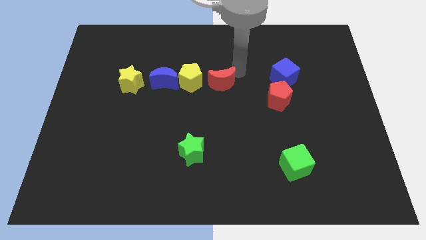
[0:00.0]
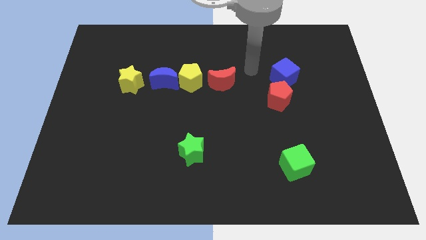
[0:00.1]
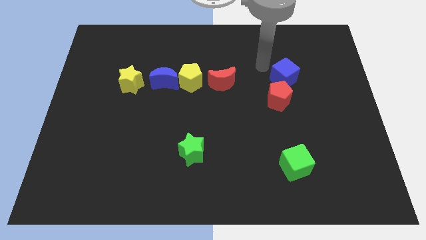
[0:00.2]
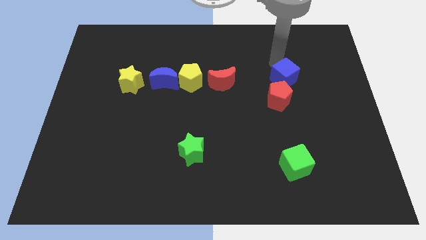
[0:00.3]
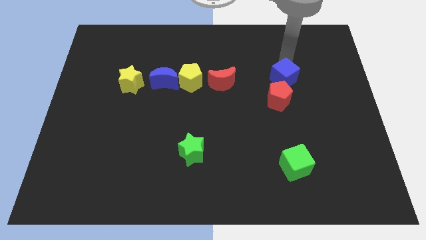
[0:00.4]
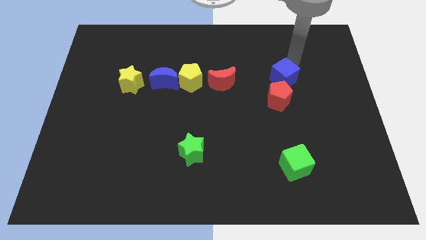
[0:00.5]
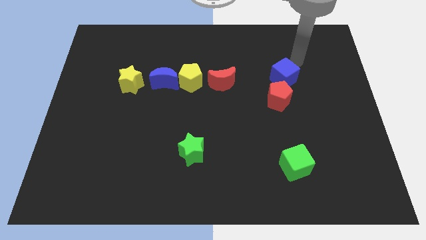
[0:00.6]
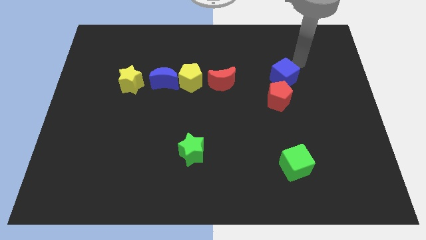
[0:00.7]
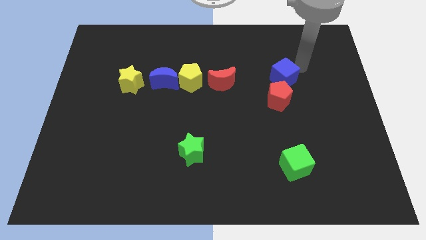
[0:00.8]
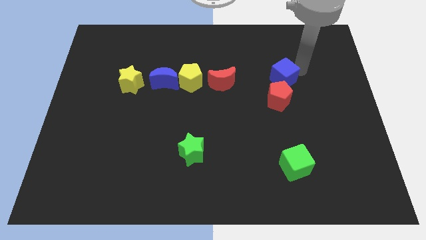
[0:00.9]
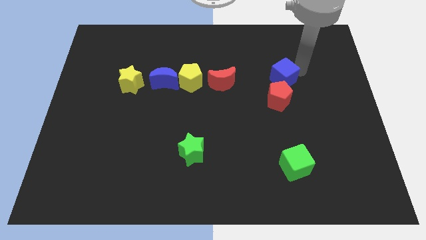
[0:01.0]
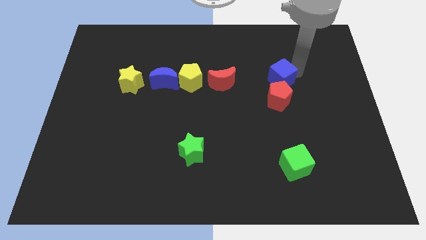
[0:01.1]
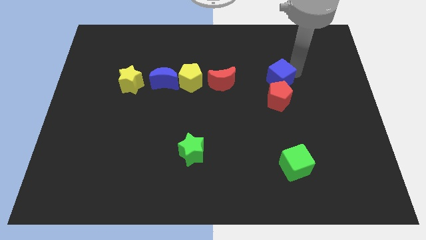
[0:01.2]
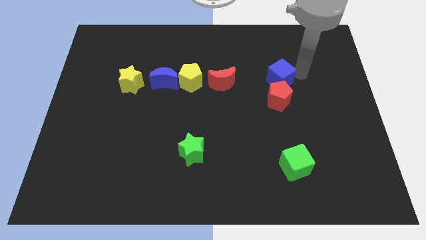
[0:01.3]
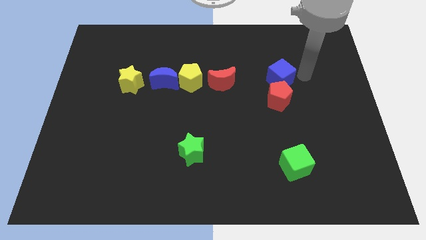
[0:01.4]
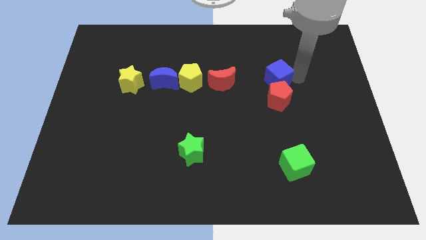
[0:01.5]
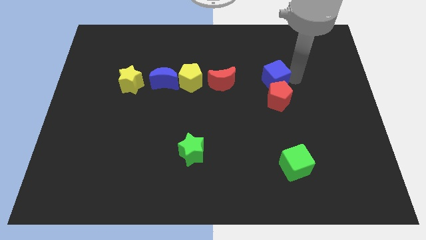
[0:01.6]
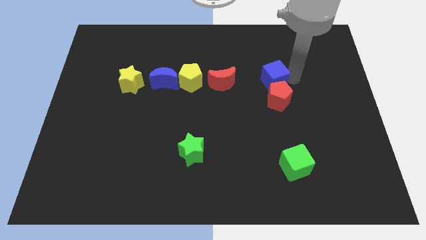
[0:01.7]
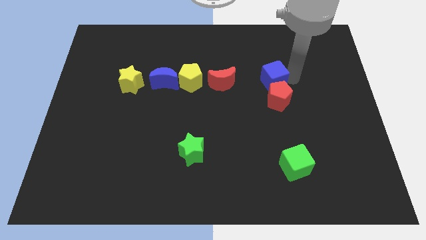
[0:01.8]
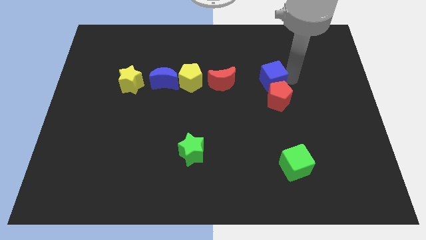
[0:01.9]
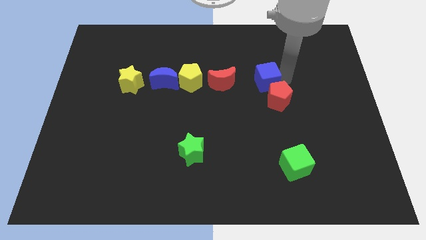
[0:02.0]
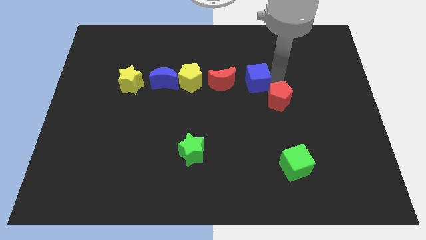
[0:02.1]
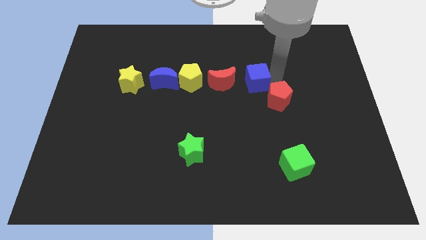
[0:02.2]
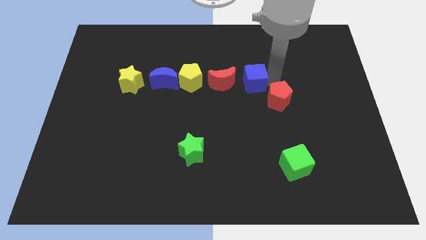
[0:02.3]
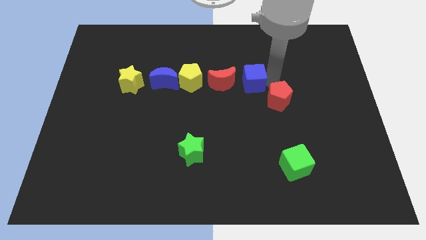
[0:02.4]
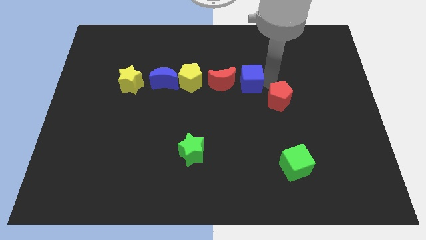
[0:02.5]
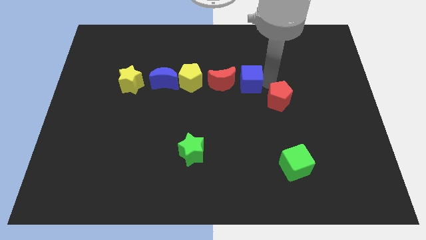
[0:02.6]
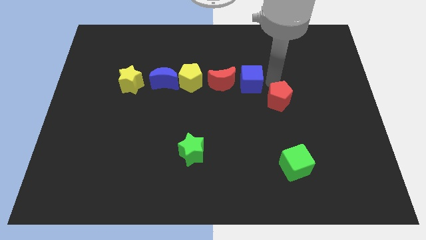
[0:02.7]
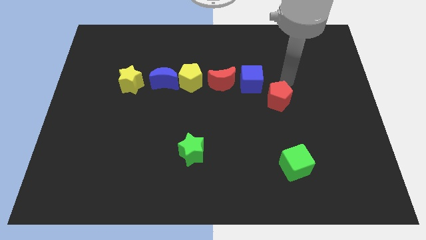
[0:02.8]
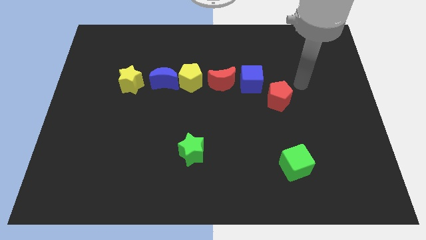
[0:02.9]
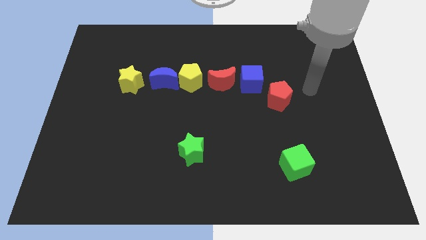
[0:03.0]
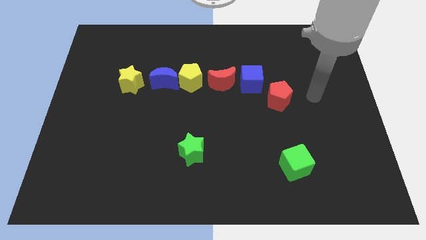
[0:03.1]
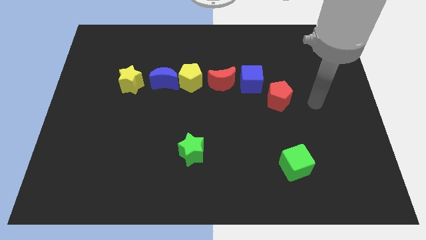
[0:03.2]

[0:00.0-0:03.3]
move the blue cube right to the red crescent

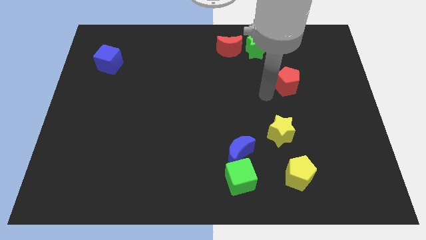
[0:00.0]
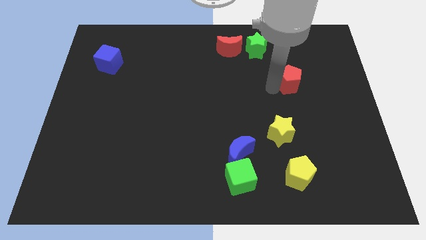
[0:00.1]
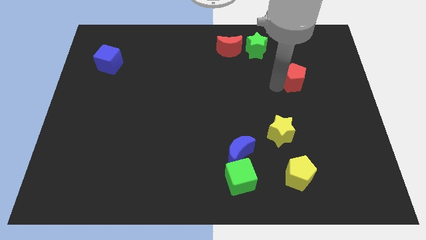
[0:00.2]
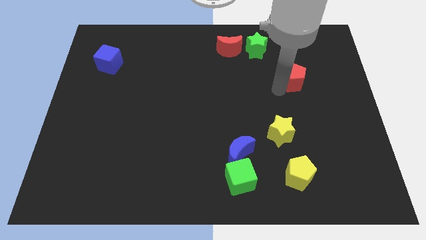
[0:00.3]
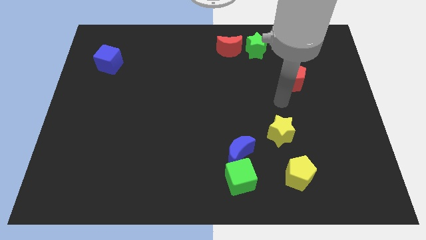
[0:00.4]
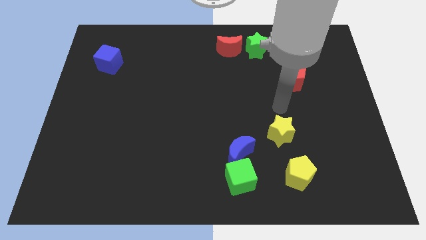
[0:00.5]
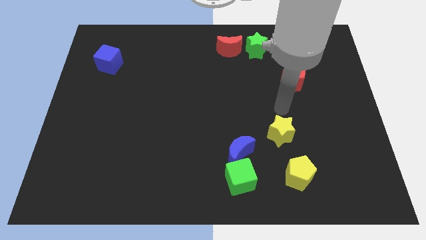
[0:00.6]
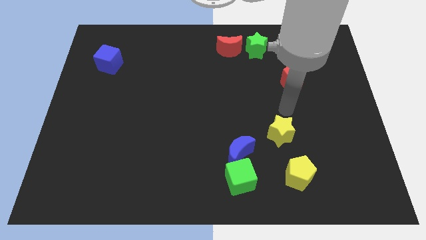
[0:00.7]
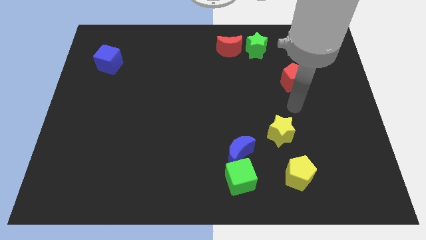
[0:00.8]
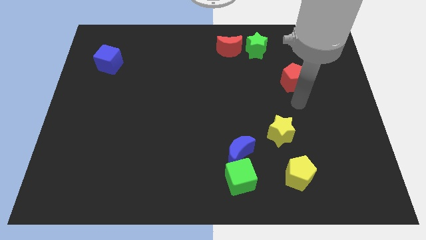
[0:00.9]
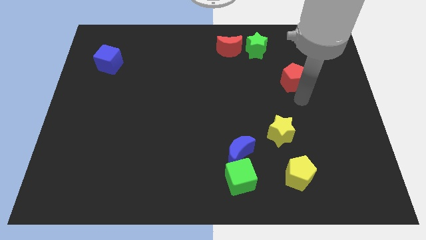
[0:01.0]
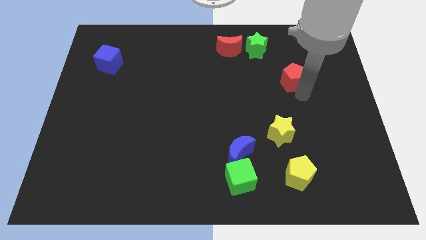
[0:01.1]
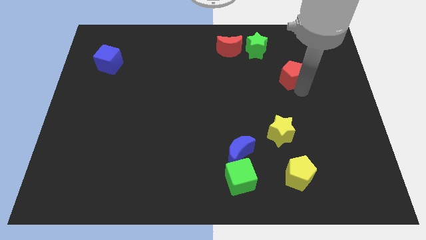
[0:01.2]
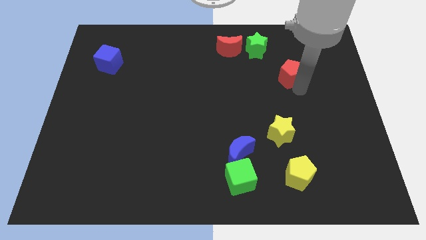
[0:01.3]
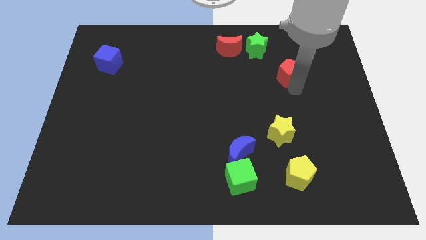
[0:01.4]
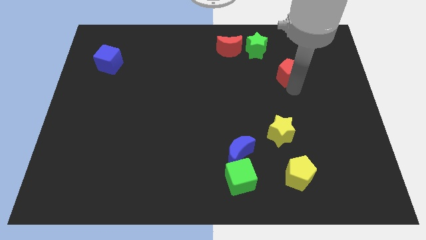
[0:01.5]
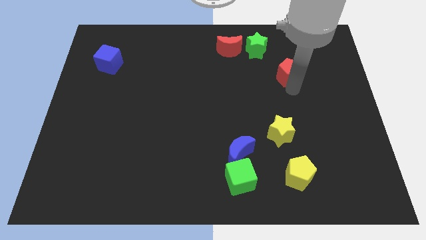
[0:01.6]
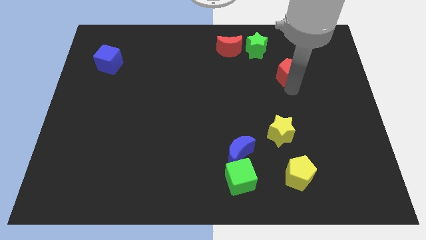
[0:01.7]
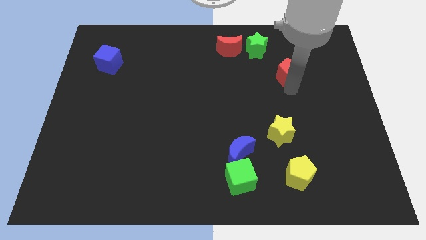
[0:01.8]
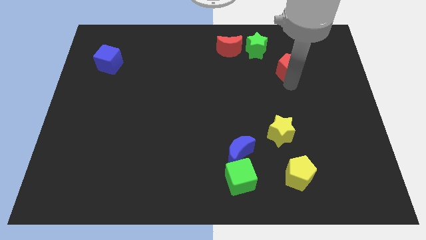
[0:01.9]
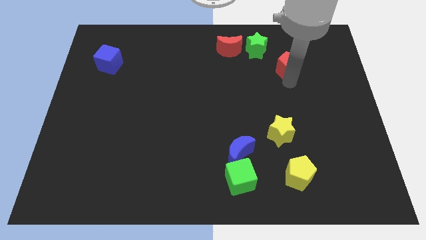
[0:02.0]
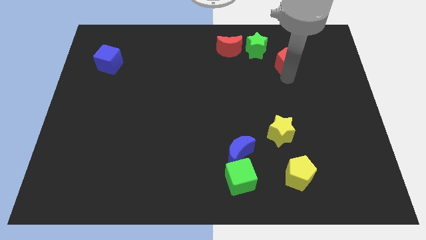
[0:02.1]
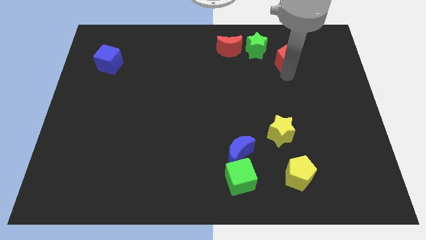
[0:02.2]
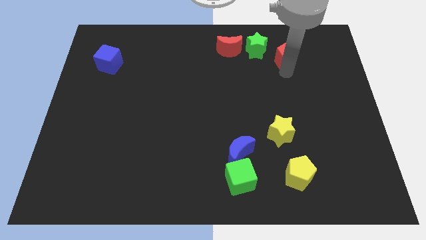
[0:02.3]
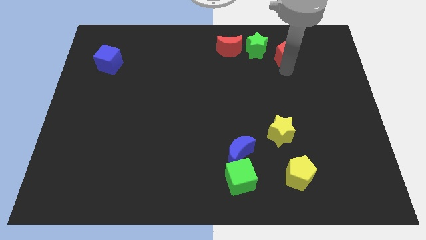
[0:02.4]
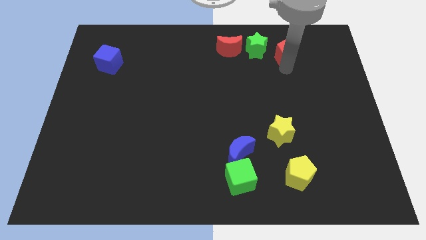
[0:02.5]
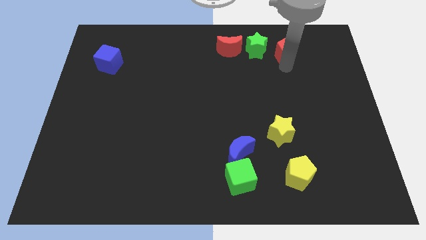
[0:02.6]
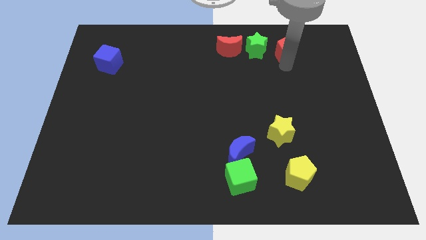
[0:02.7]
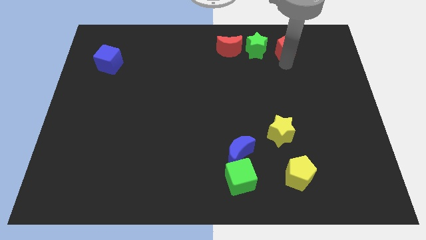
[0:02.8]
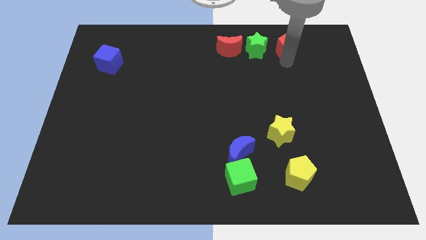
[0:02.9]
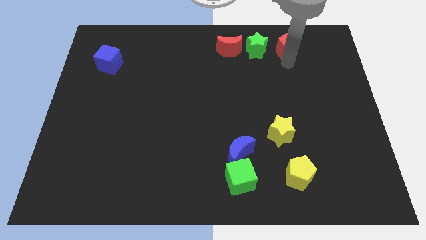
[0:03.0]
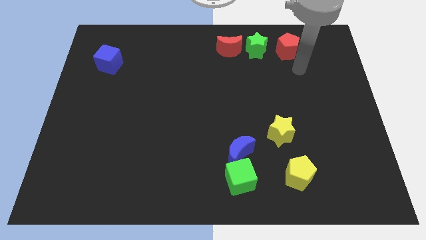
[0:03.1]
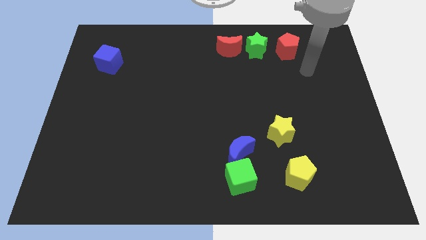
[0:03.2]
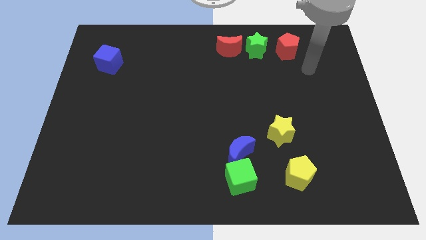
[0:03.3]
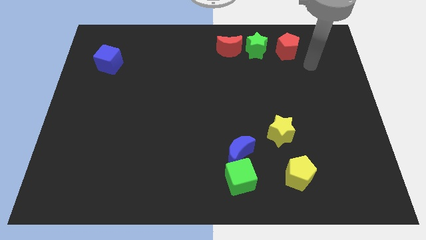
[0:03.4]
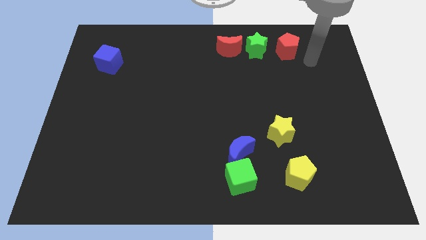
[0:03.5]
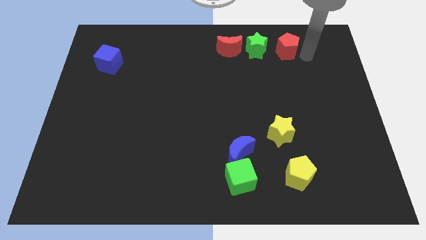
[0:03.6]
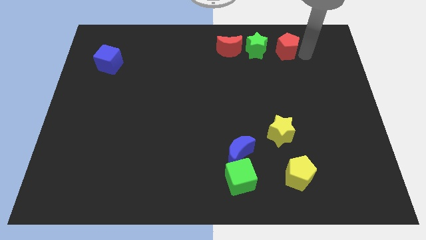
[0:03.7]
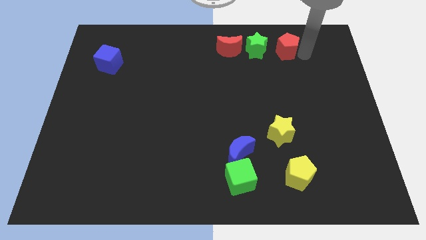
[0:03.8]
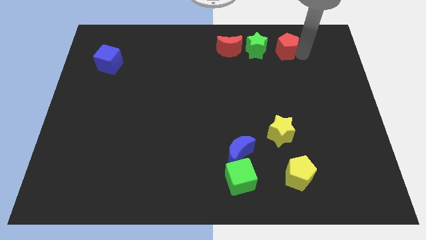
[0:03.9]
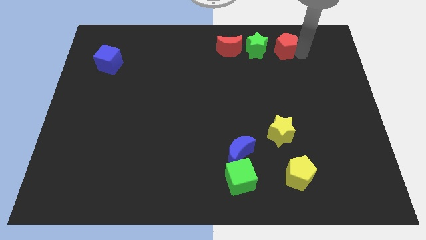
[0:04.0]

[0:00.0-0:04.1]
place red pentagon to the right of green star

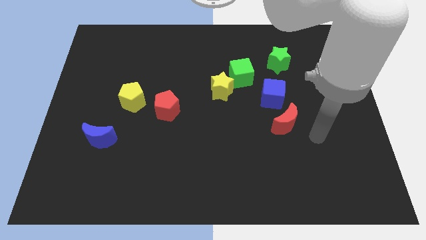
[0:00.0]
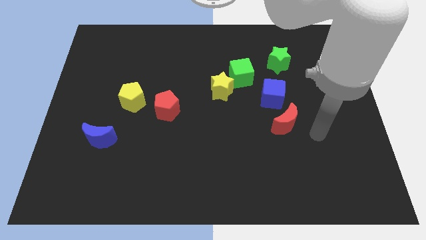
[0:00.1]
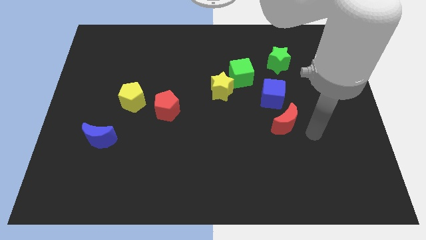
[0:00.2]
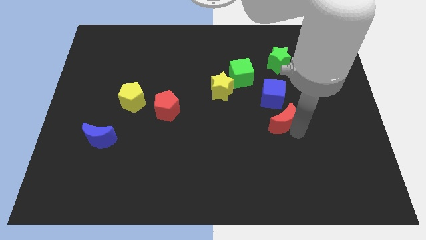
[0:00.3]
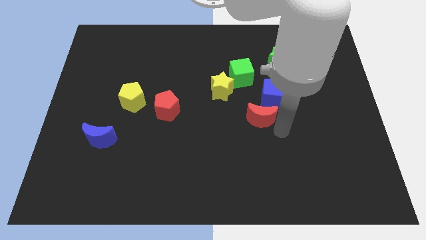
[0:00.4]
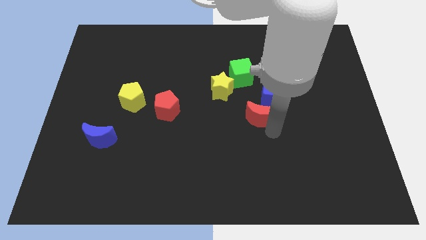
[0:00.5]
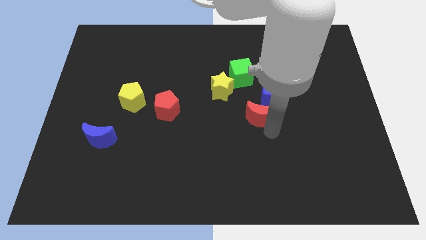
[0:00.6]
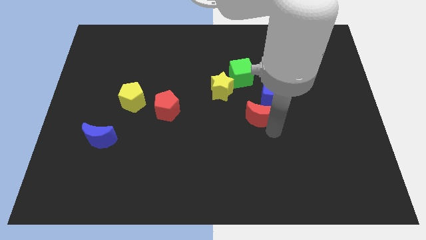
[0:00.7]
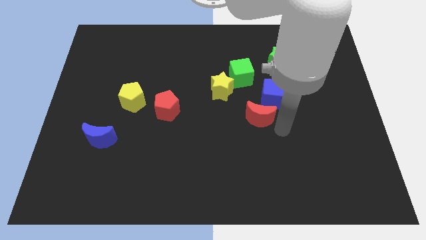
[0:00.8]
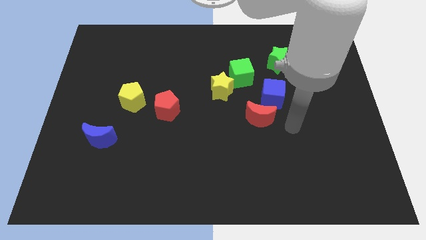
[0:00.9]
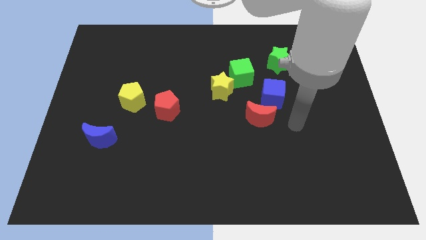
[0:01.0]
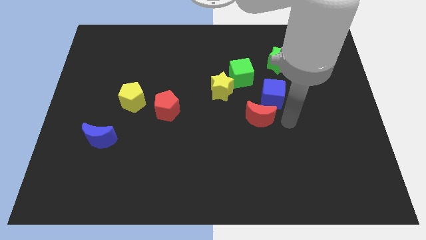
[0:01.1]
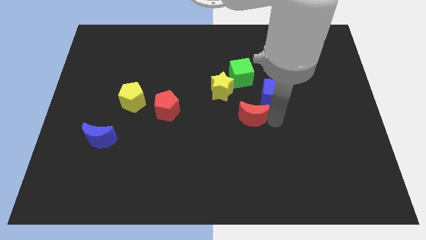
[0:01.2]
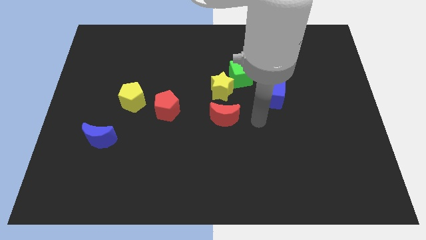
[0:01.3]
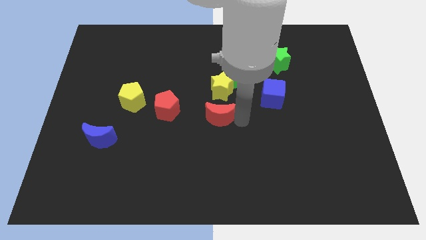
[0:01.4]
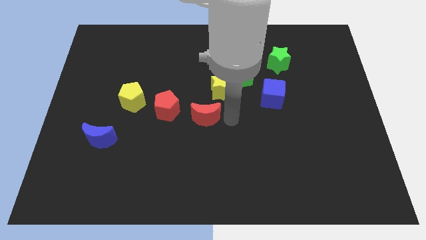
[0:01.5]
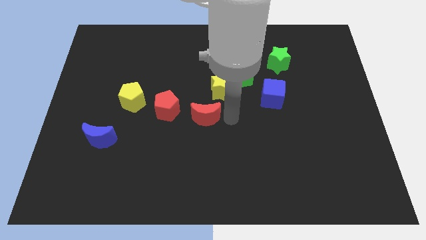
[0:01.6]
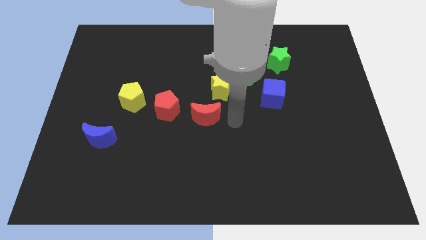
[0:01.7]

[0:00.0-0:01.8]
place red crescent to the right of the red pentagon
